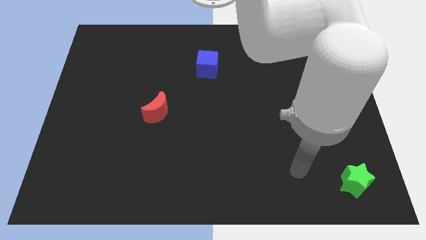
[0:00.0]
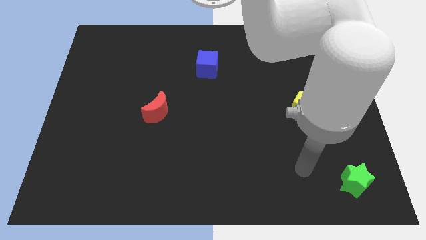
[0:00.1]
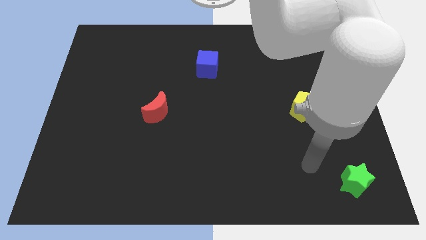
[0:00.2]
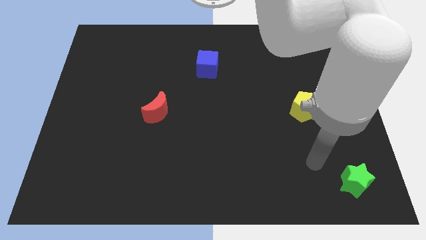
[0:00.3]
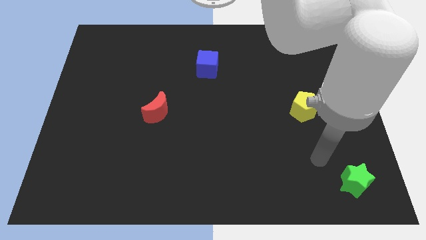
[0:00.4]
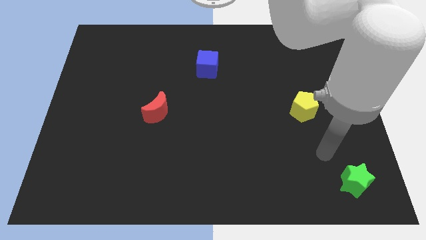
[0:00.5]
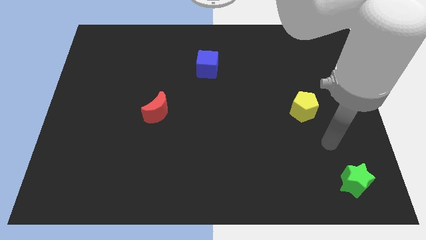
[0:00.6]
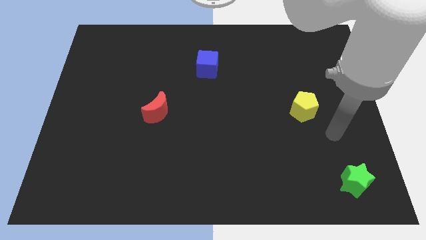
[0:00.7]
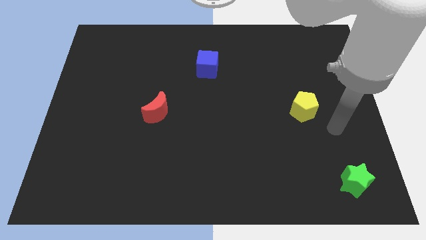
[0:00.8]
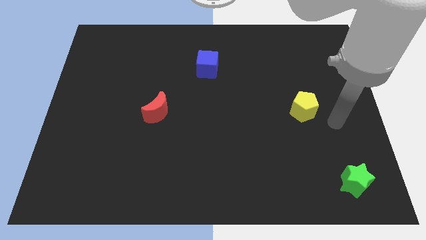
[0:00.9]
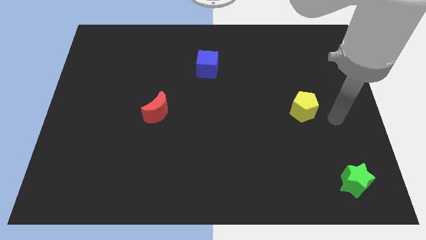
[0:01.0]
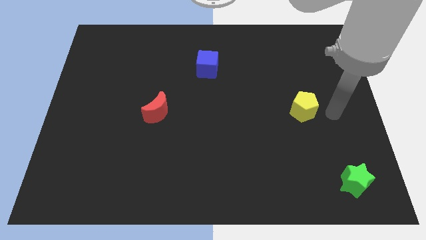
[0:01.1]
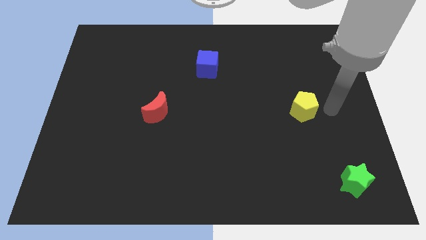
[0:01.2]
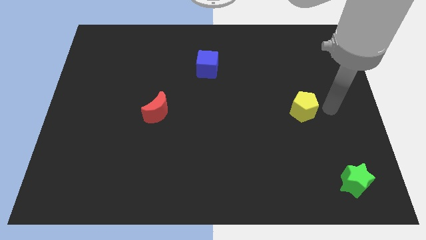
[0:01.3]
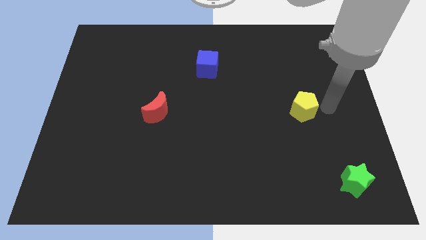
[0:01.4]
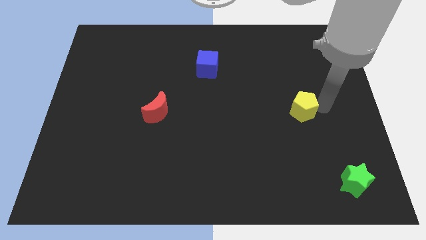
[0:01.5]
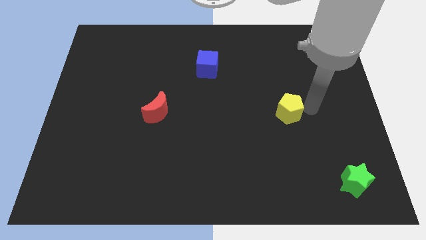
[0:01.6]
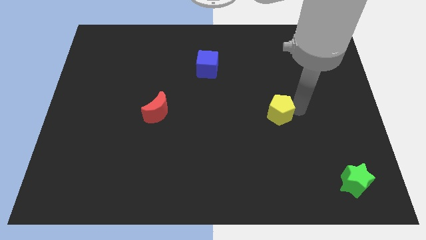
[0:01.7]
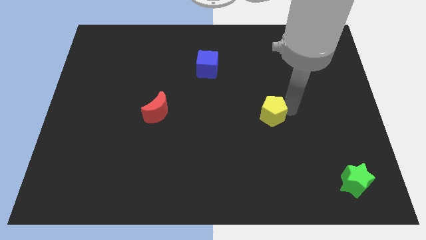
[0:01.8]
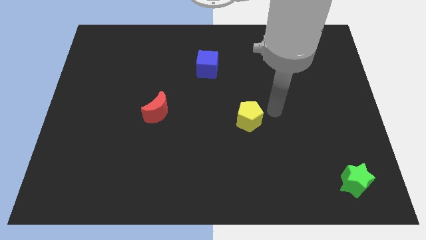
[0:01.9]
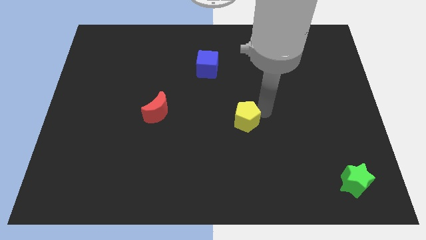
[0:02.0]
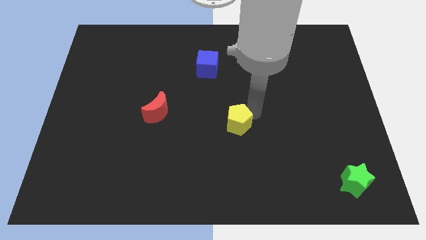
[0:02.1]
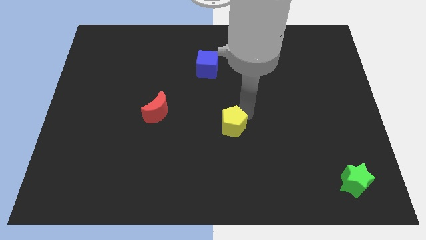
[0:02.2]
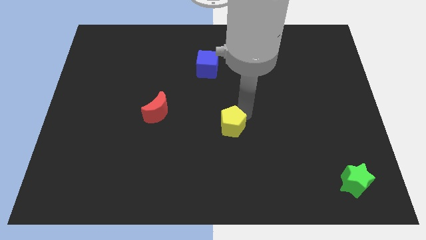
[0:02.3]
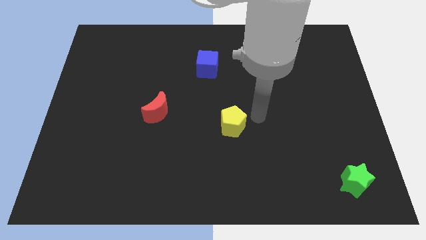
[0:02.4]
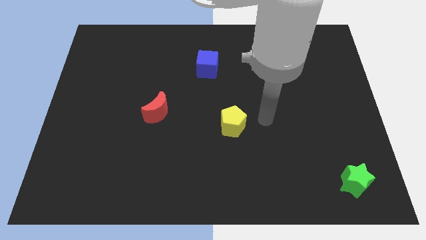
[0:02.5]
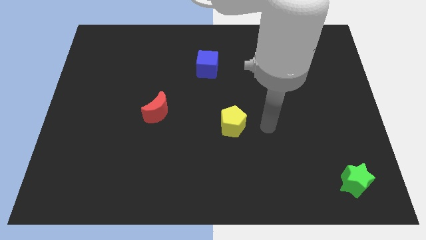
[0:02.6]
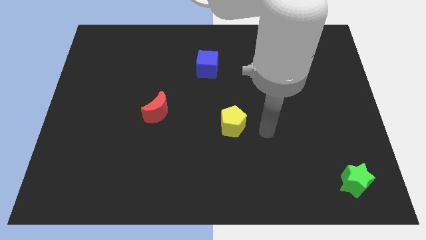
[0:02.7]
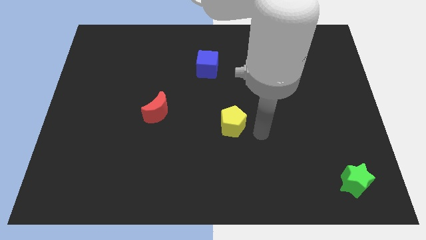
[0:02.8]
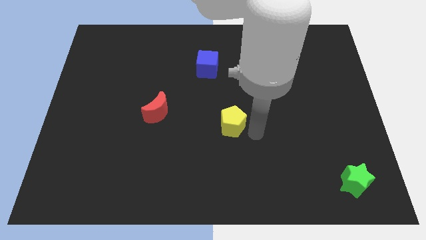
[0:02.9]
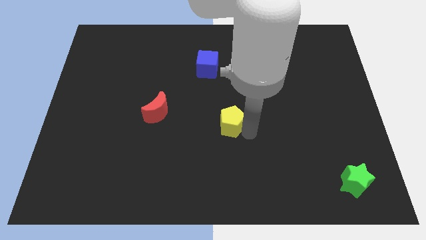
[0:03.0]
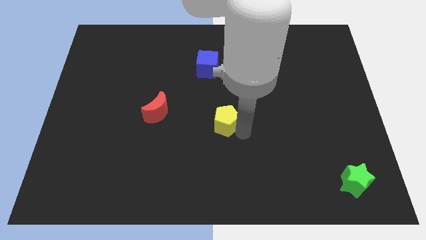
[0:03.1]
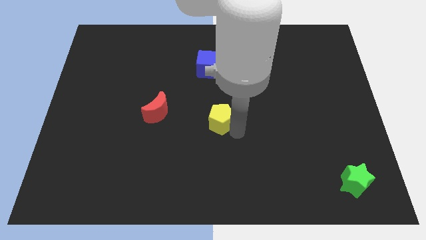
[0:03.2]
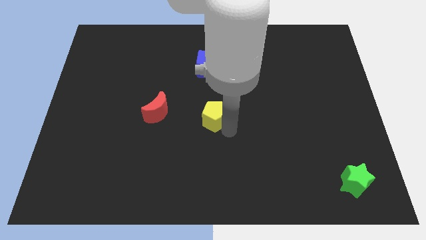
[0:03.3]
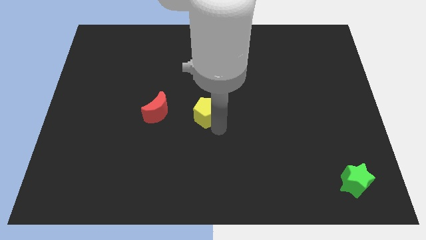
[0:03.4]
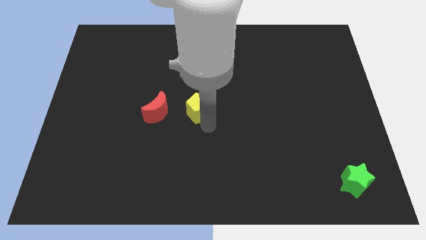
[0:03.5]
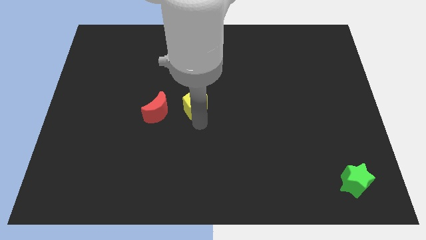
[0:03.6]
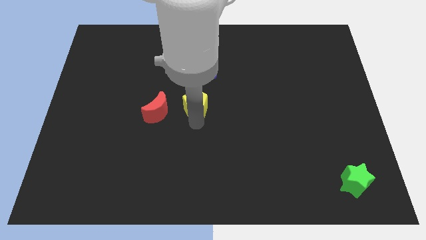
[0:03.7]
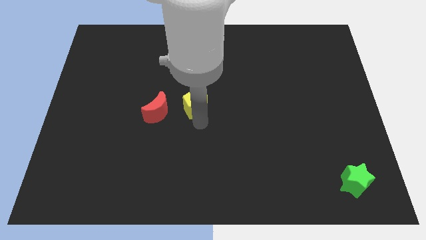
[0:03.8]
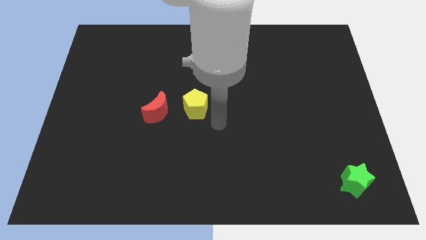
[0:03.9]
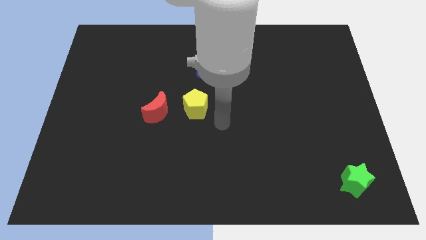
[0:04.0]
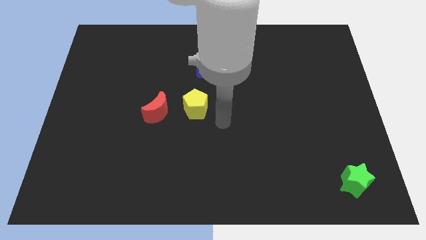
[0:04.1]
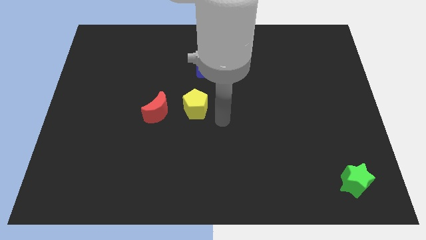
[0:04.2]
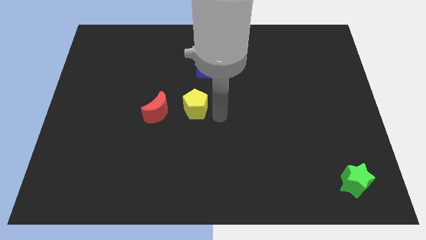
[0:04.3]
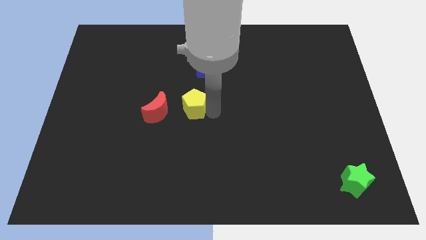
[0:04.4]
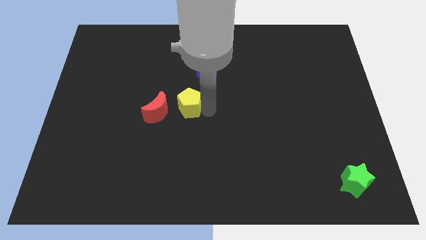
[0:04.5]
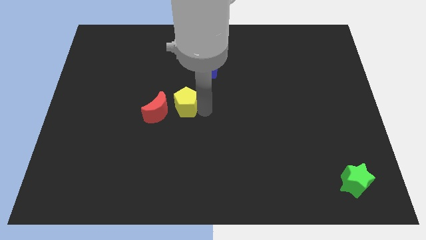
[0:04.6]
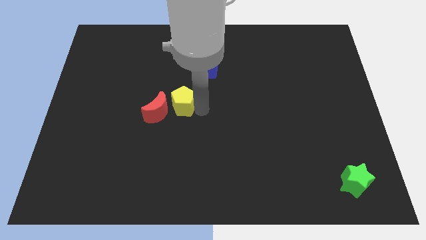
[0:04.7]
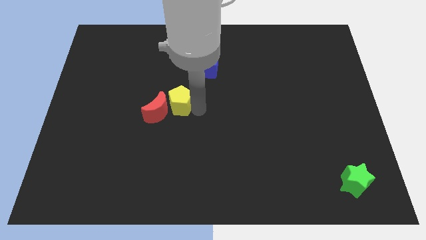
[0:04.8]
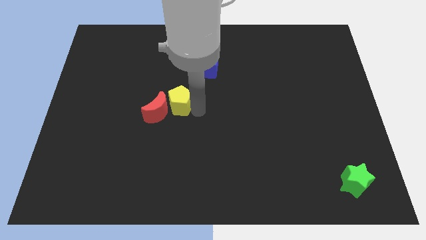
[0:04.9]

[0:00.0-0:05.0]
move the pentagon next to the moon

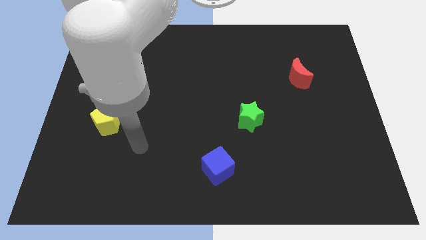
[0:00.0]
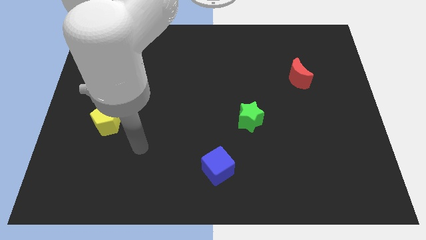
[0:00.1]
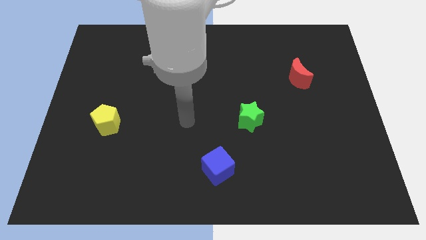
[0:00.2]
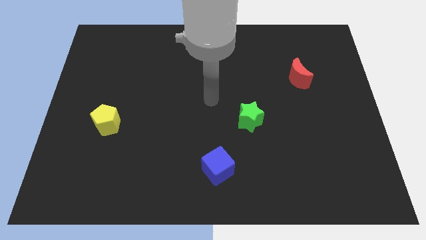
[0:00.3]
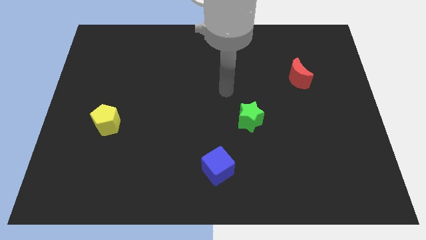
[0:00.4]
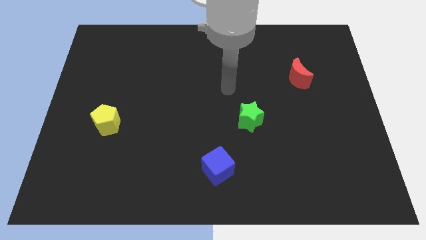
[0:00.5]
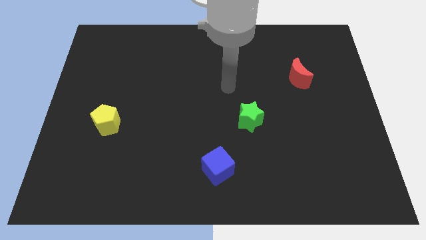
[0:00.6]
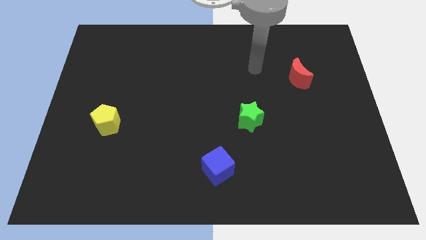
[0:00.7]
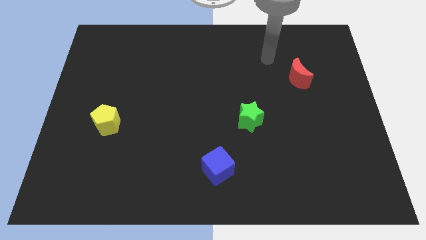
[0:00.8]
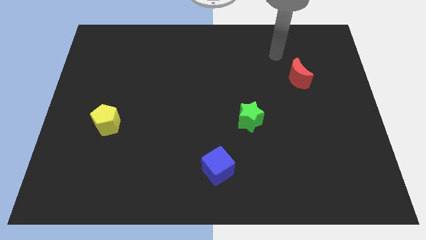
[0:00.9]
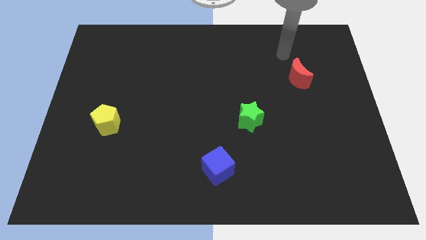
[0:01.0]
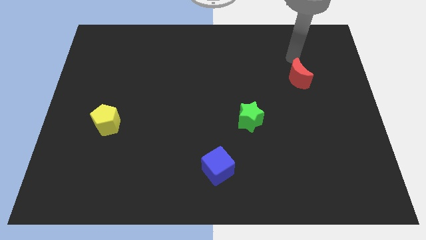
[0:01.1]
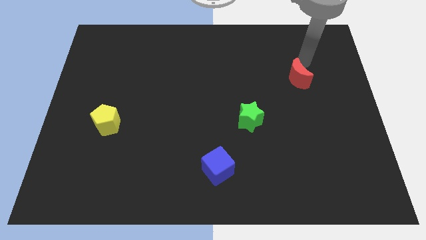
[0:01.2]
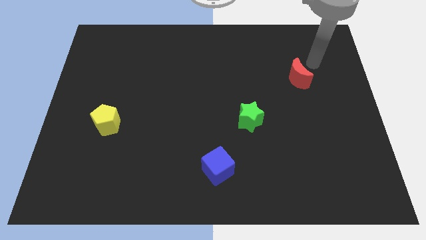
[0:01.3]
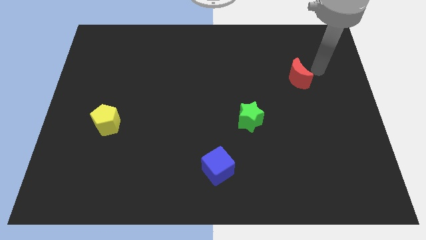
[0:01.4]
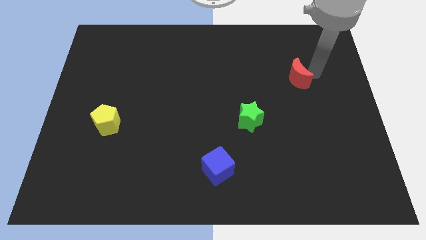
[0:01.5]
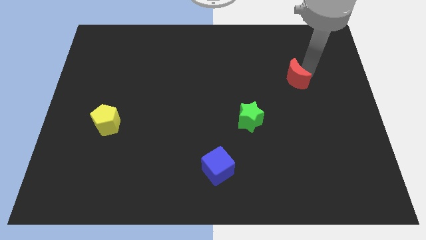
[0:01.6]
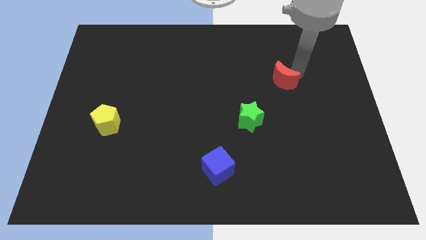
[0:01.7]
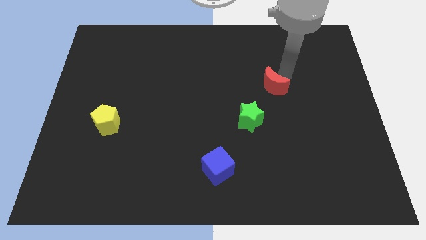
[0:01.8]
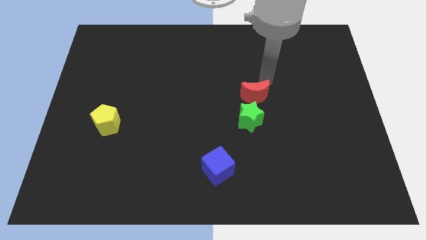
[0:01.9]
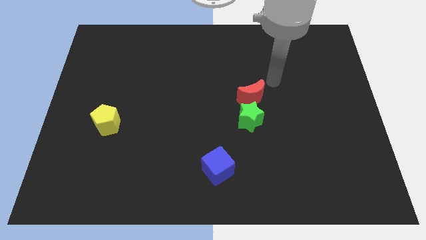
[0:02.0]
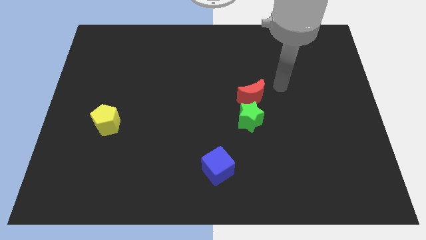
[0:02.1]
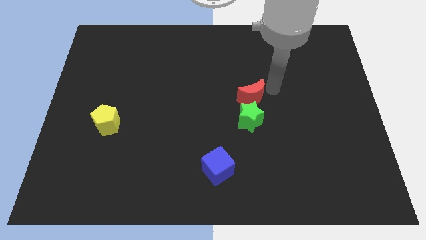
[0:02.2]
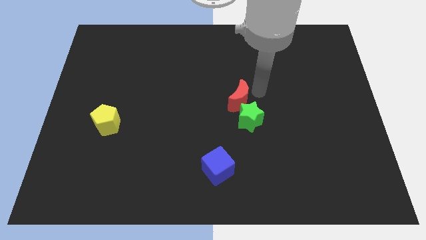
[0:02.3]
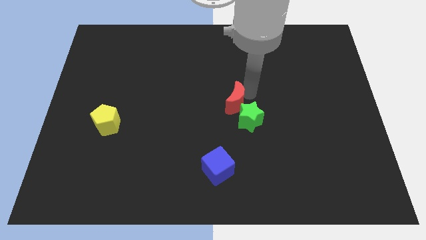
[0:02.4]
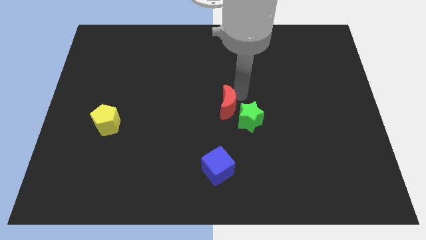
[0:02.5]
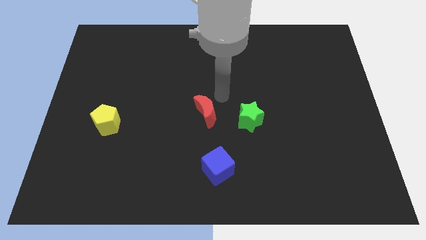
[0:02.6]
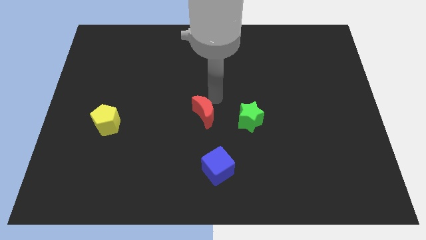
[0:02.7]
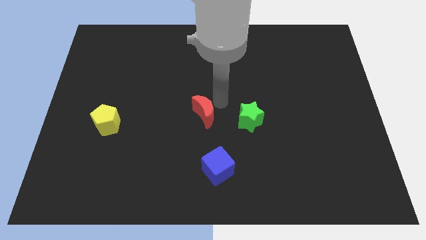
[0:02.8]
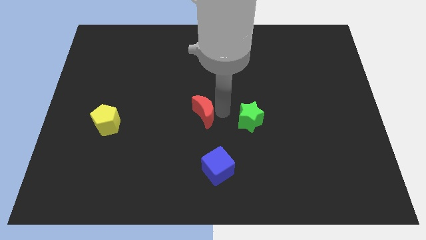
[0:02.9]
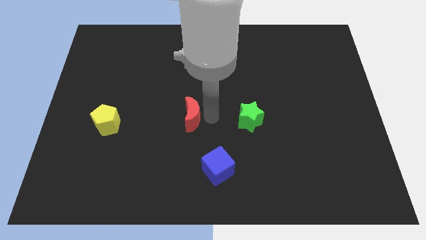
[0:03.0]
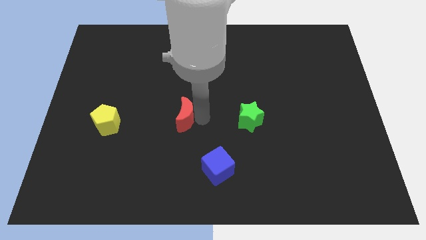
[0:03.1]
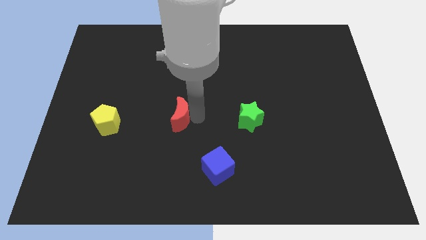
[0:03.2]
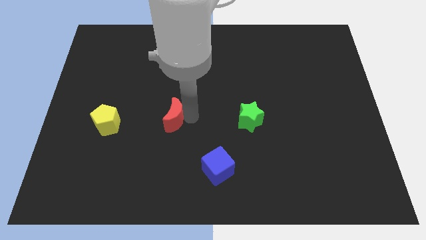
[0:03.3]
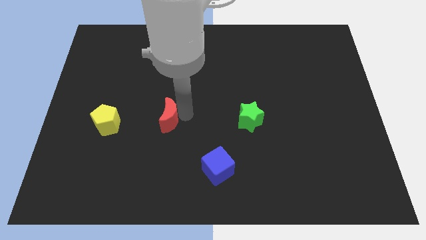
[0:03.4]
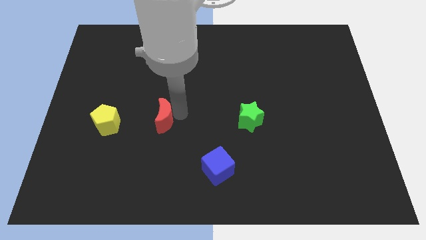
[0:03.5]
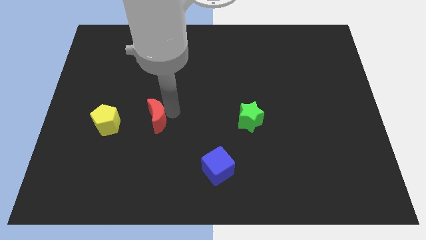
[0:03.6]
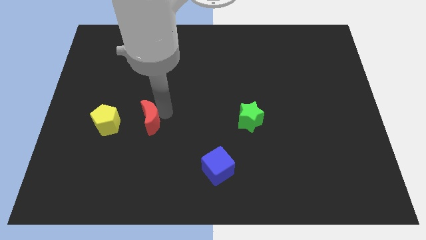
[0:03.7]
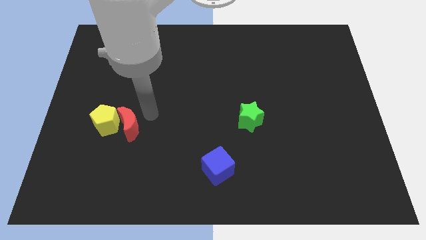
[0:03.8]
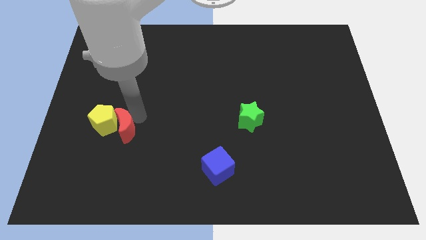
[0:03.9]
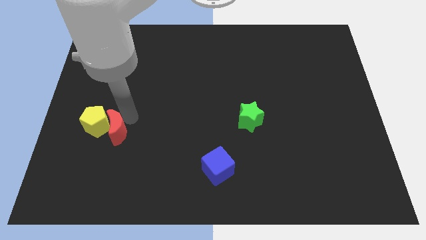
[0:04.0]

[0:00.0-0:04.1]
move the red block to the yellow pentagon
